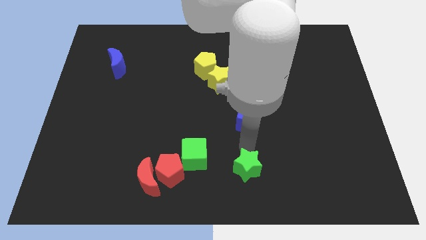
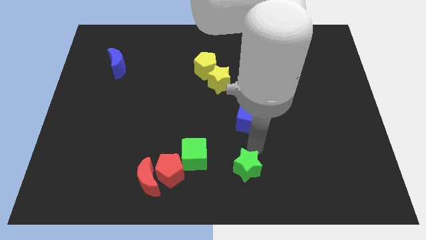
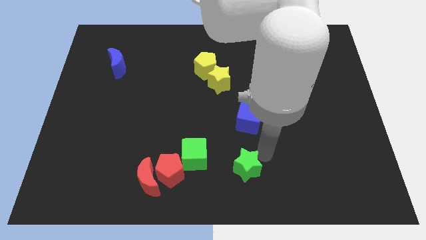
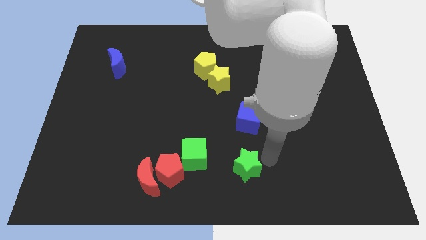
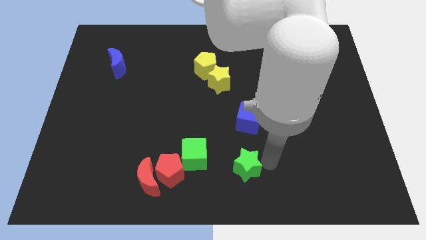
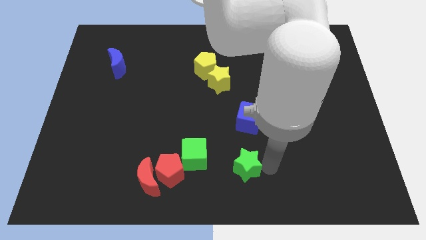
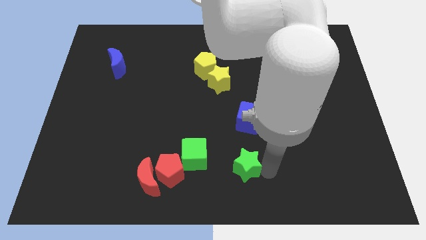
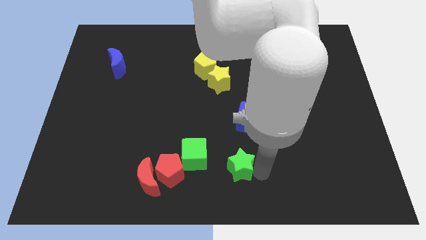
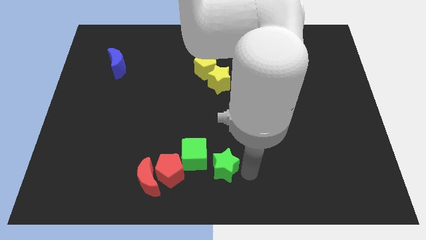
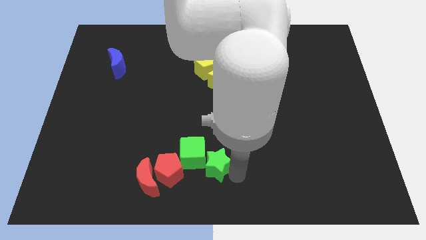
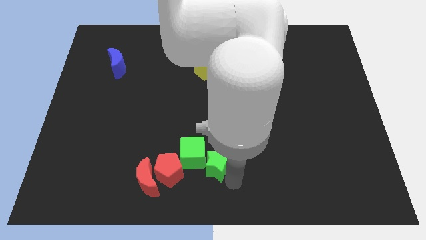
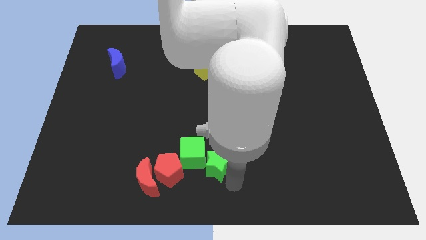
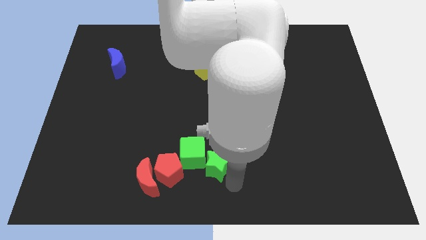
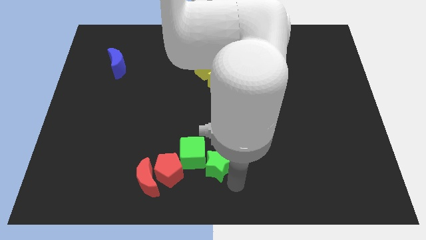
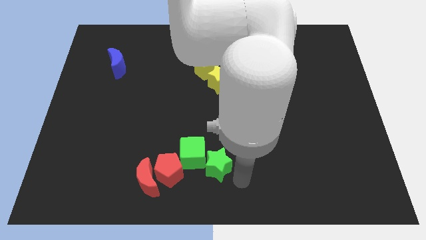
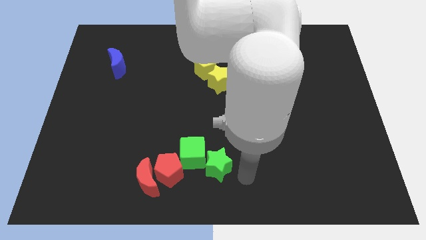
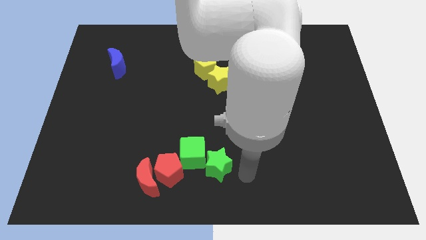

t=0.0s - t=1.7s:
slide green star into the green cube

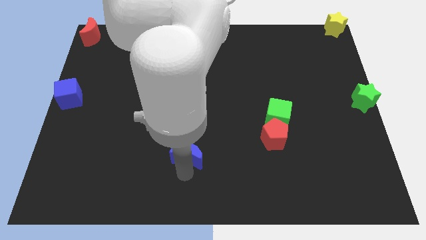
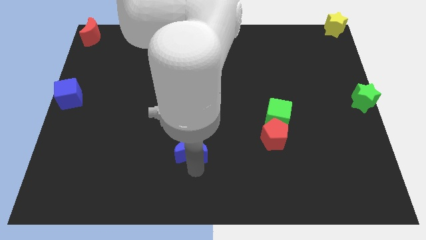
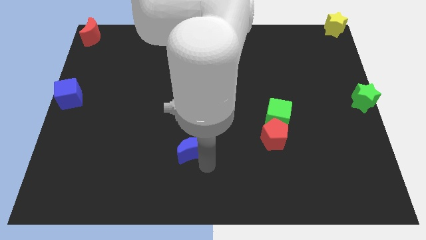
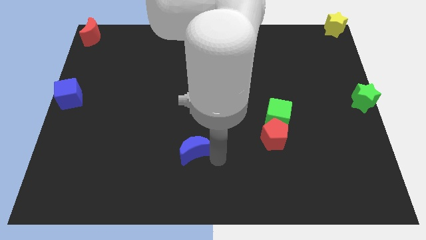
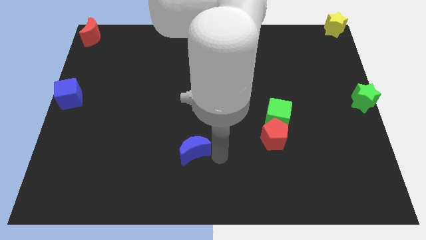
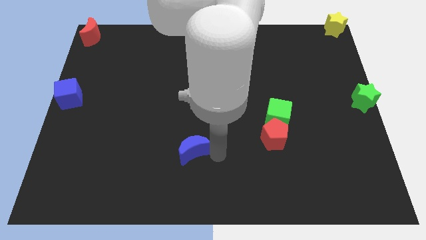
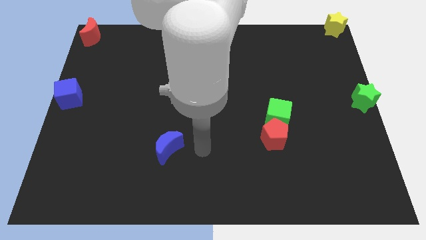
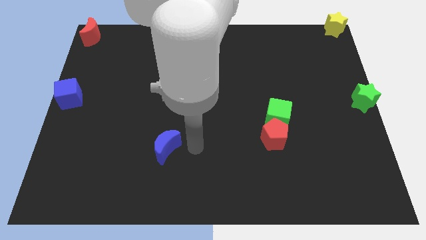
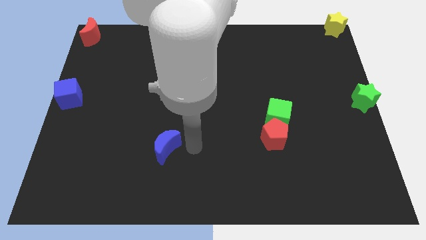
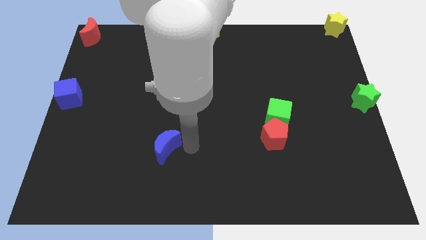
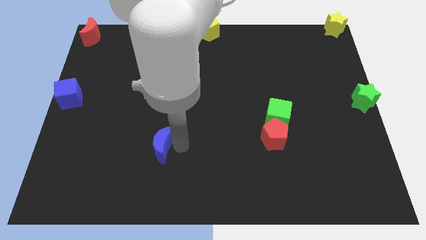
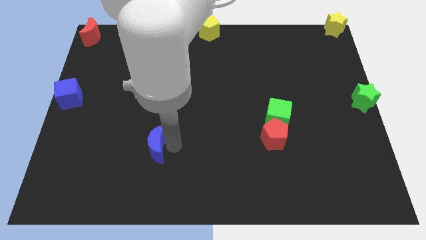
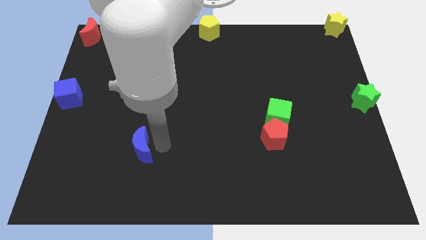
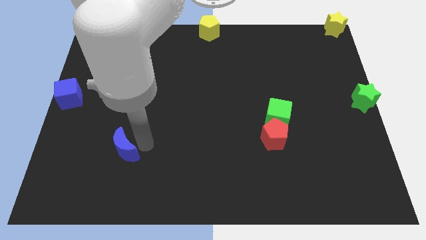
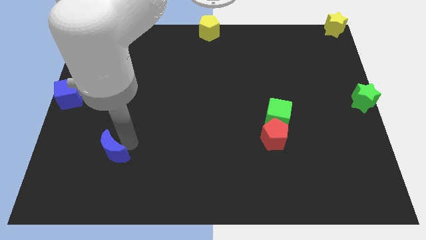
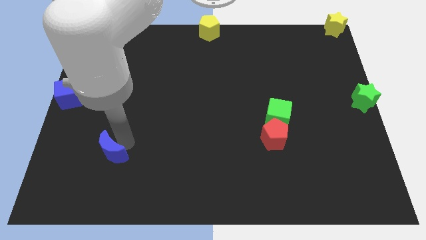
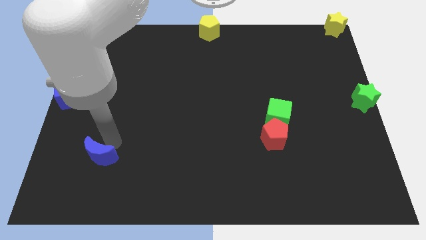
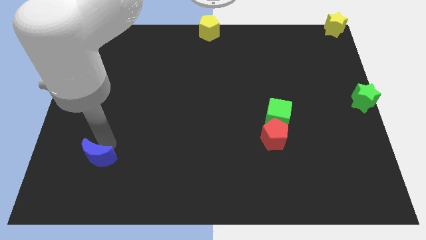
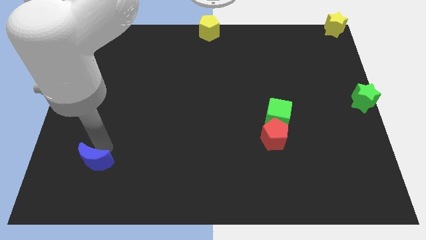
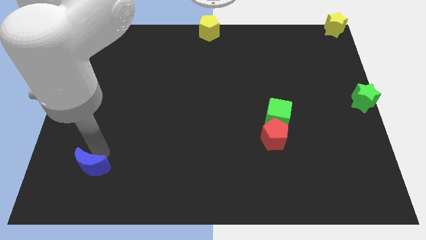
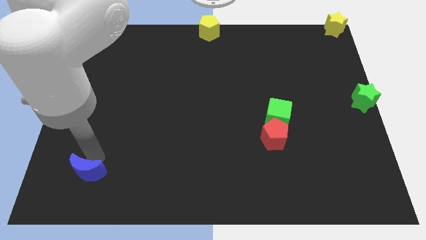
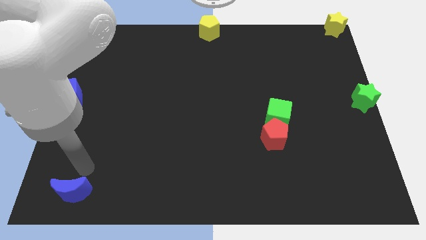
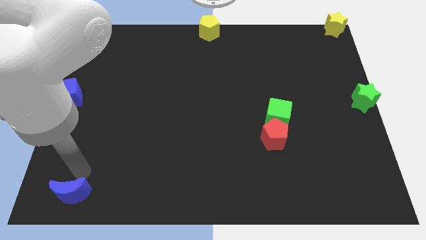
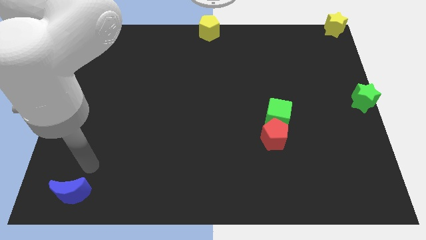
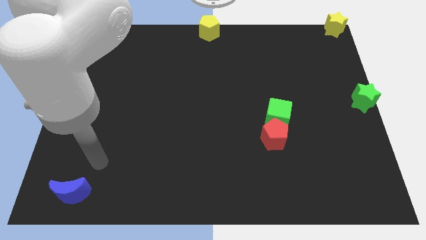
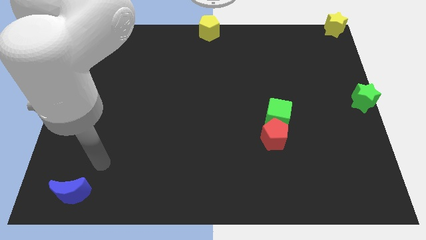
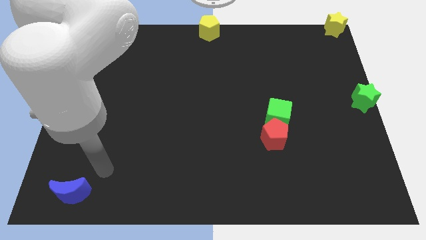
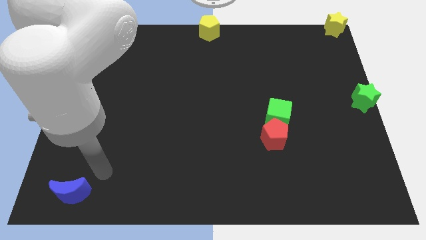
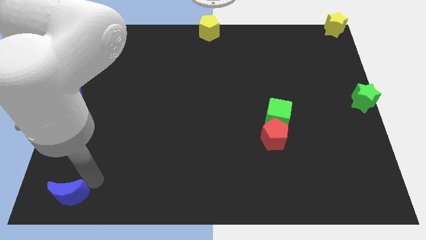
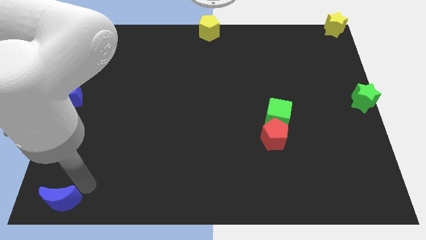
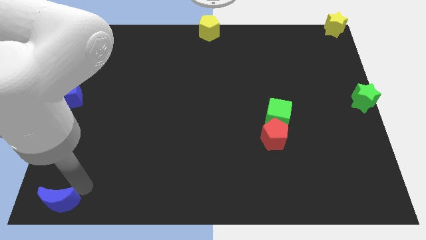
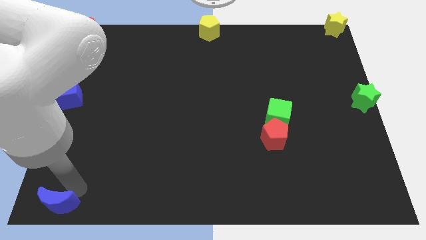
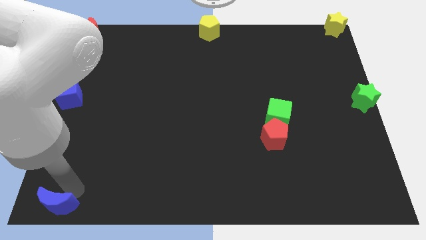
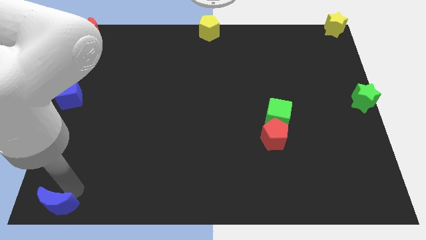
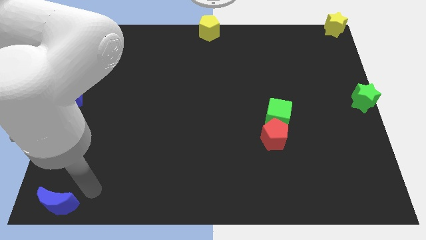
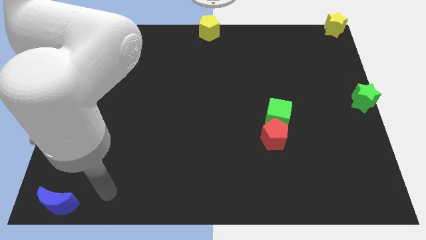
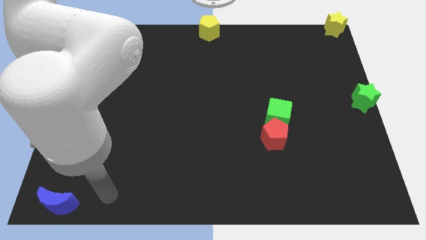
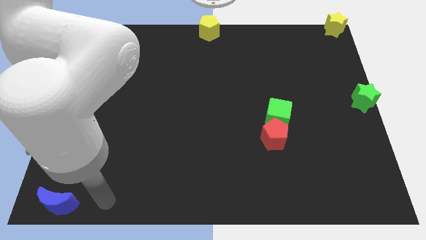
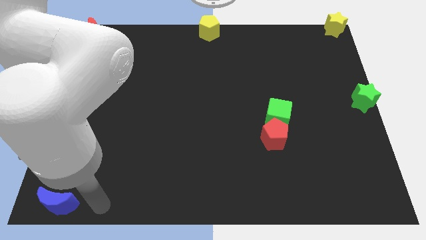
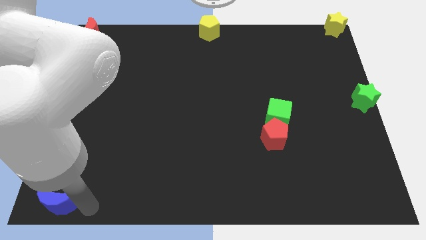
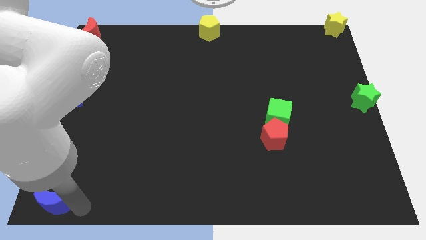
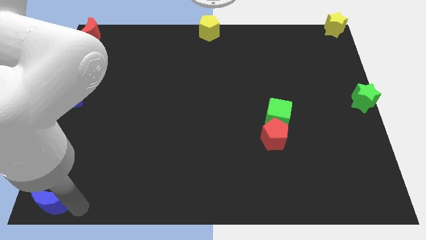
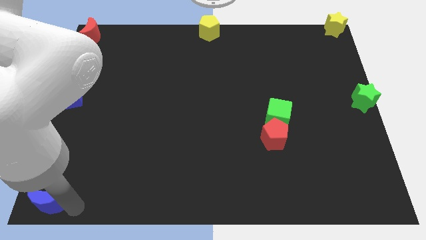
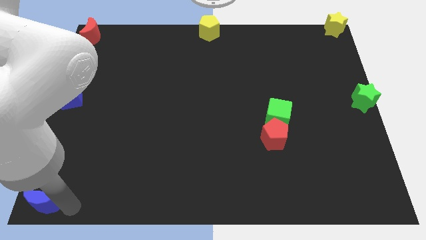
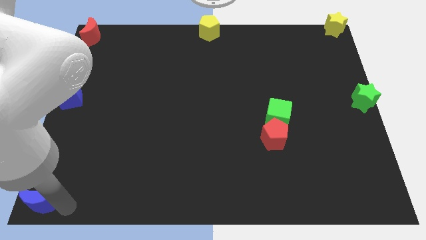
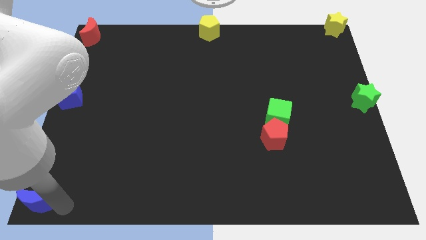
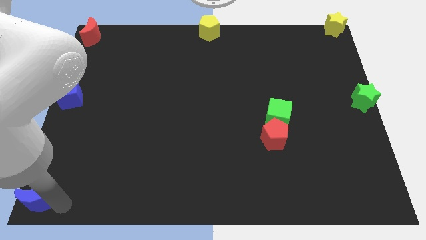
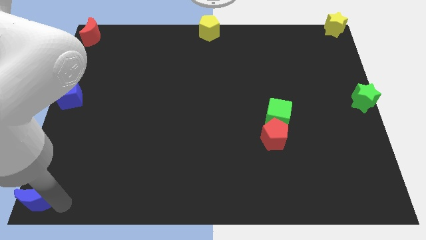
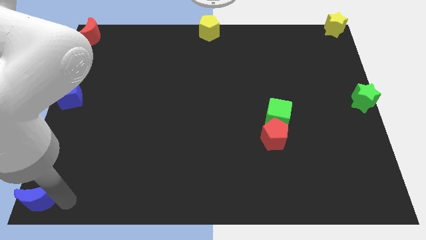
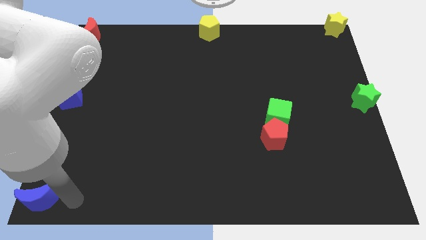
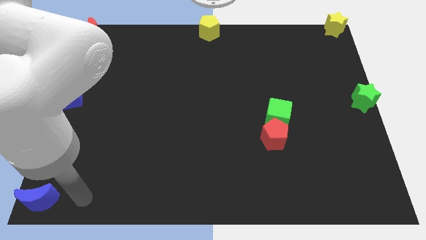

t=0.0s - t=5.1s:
move blue crescent to left bottom corner of the board

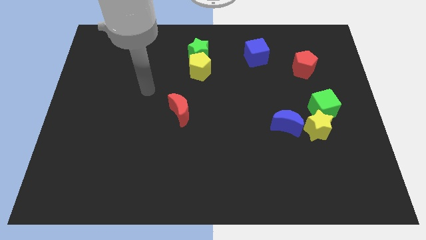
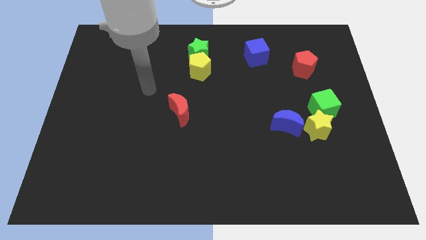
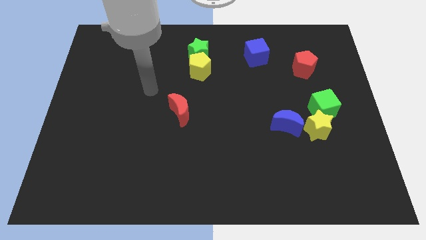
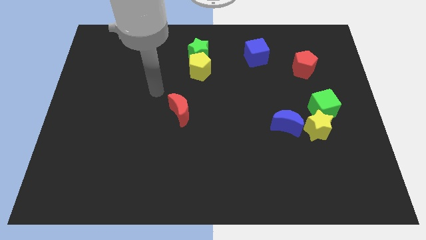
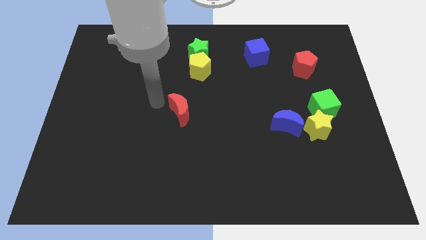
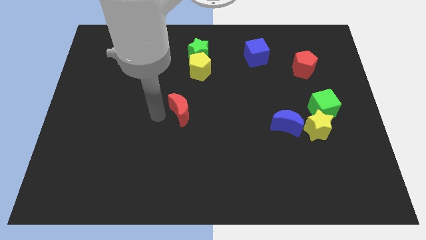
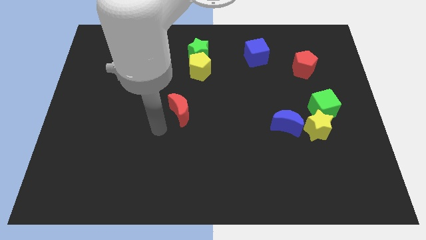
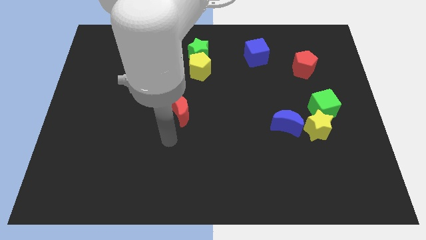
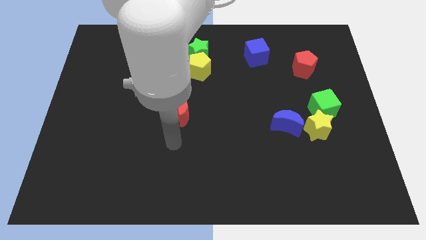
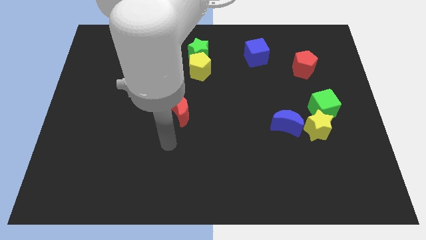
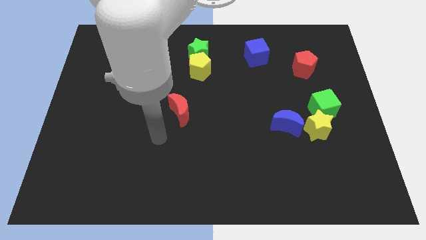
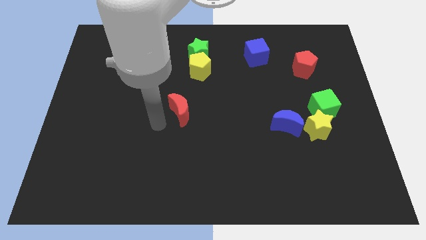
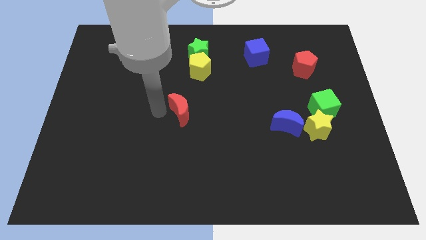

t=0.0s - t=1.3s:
point your hand at the left side of the red crescent

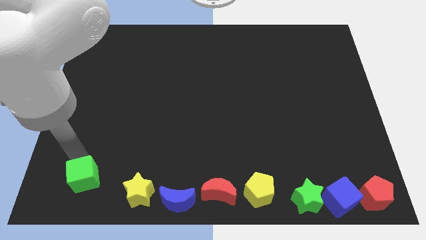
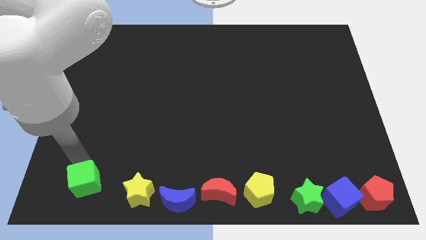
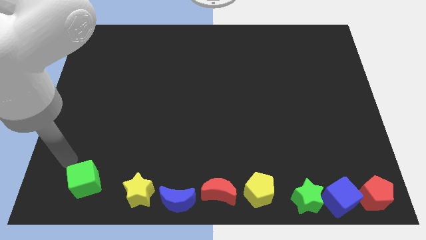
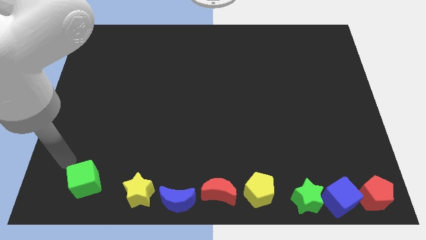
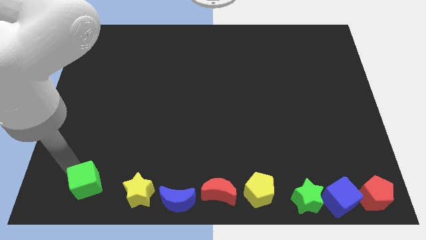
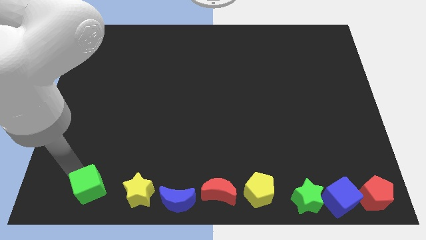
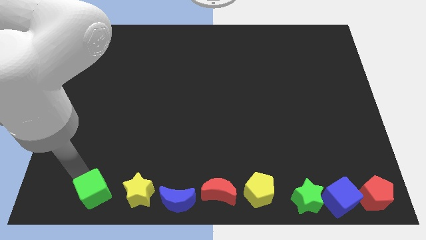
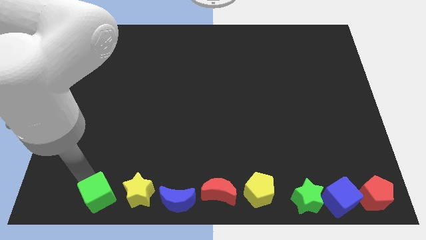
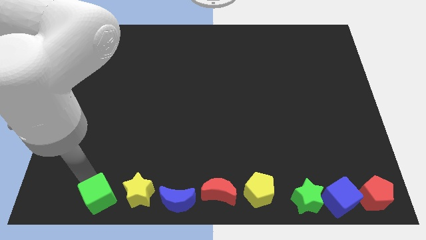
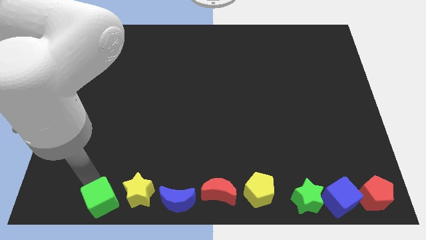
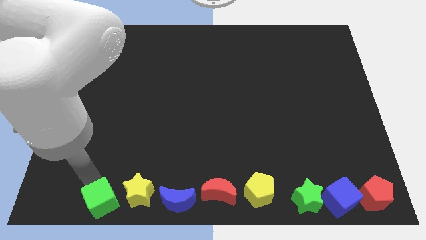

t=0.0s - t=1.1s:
put the green cube adjacent to the yellow star
